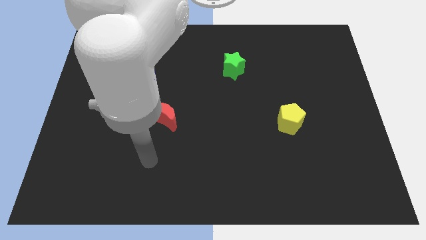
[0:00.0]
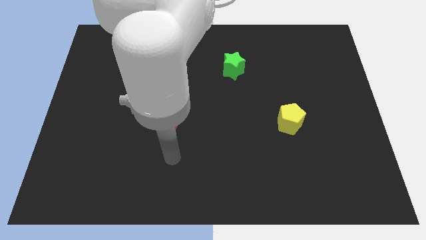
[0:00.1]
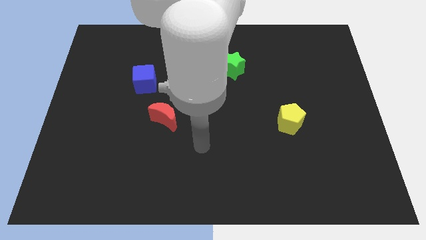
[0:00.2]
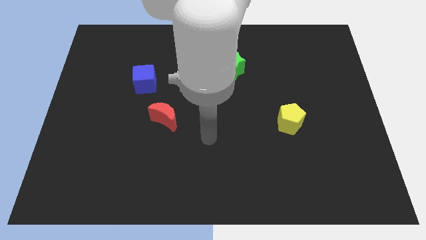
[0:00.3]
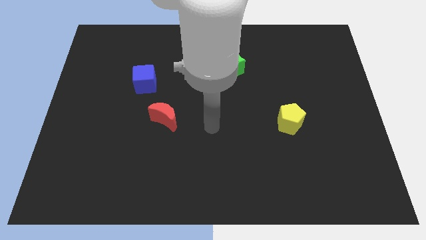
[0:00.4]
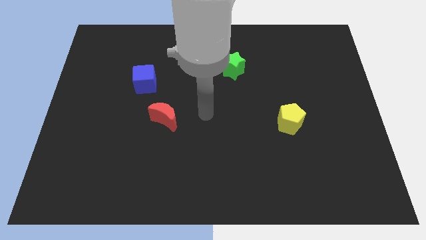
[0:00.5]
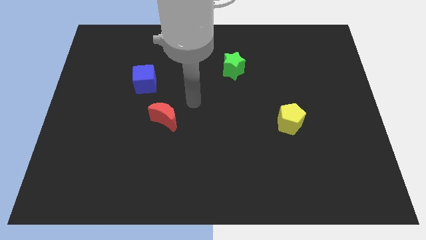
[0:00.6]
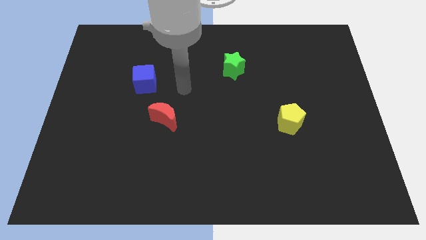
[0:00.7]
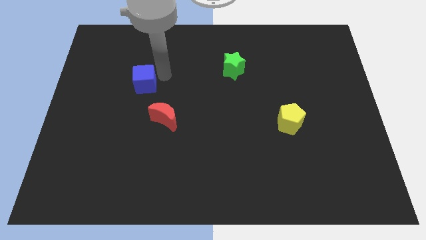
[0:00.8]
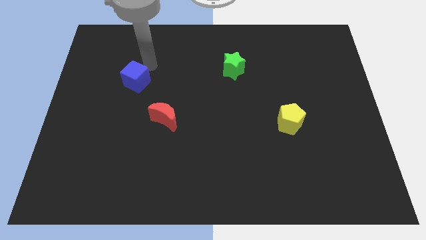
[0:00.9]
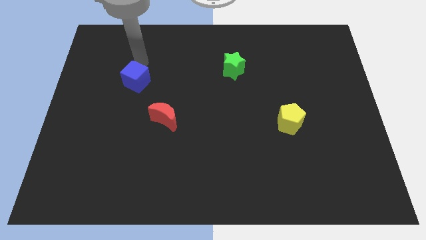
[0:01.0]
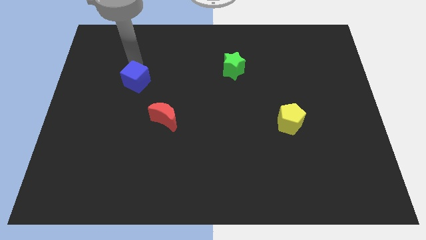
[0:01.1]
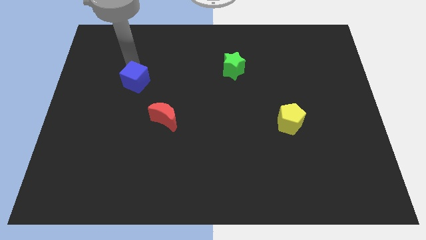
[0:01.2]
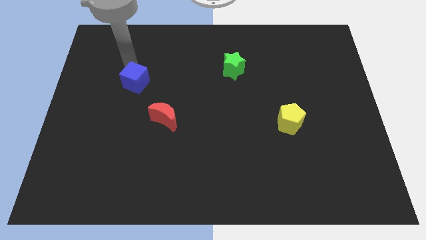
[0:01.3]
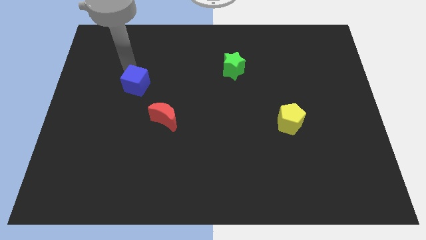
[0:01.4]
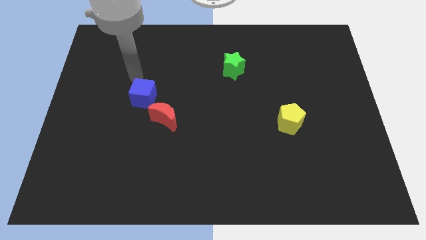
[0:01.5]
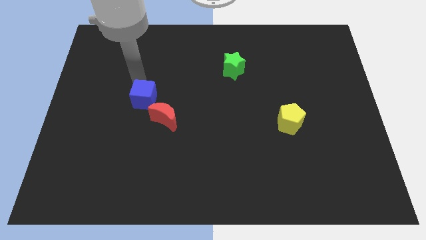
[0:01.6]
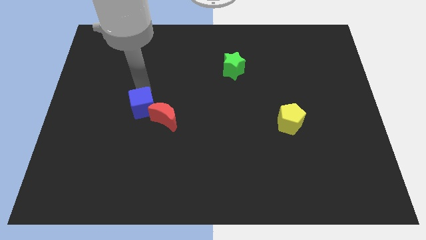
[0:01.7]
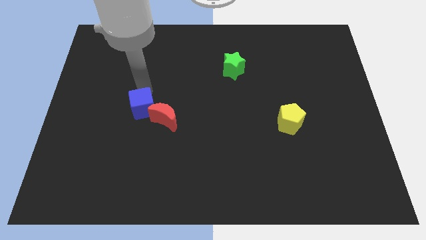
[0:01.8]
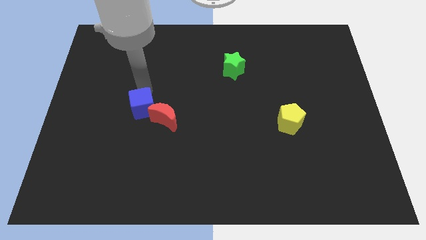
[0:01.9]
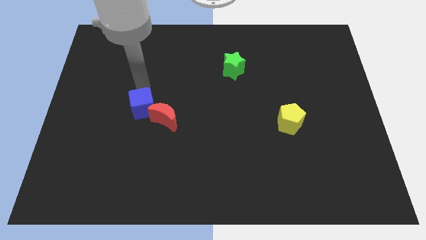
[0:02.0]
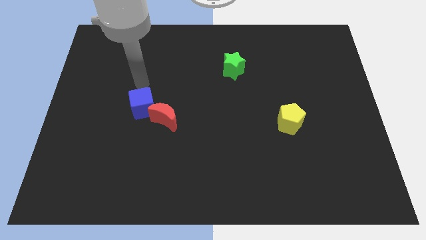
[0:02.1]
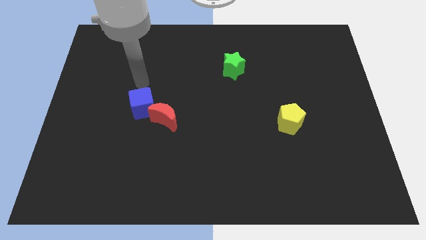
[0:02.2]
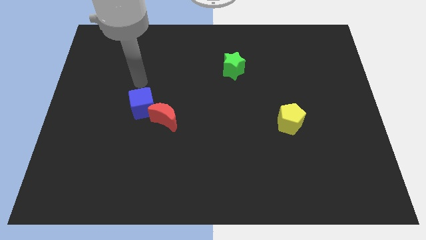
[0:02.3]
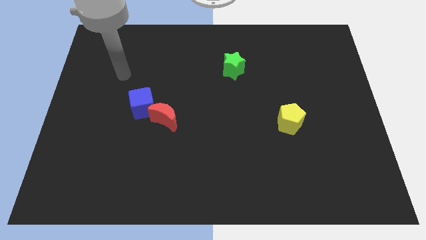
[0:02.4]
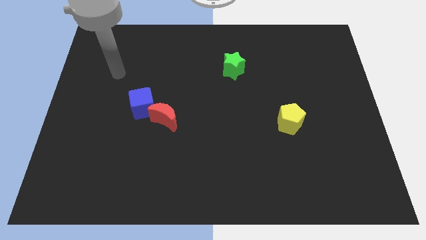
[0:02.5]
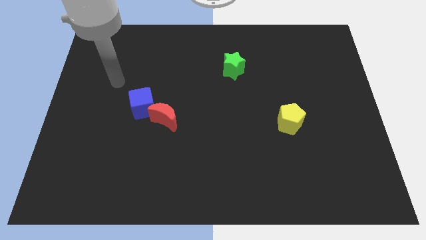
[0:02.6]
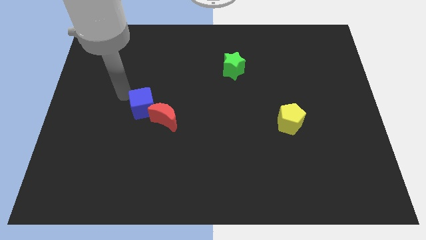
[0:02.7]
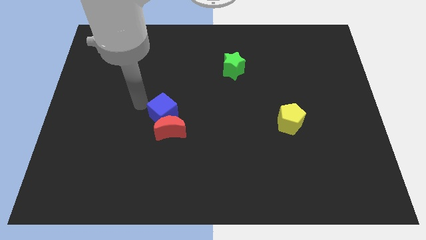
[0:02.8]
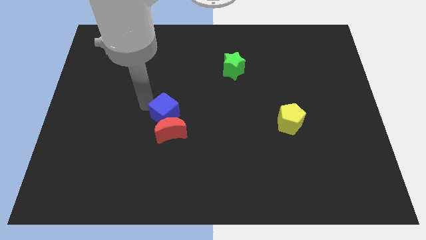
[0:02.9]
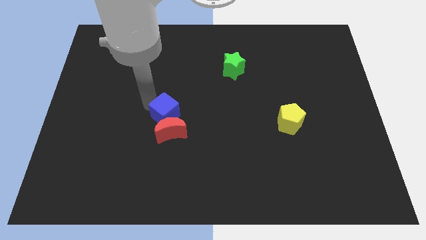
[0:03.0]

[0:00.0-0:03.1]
slide the cube next to the moon

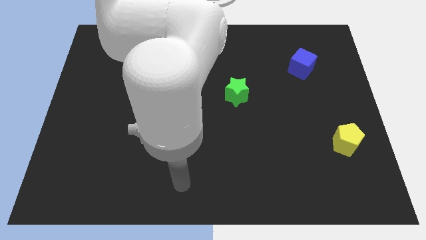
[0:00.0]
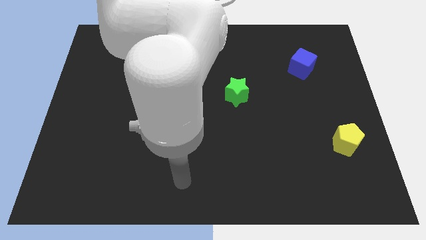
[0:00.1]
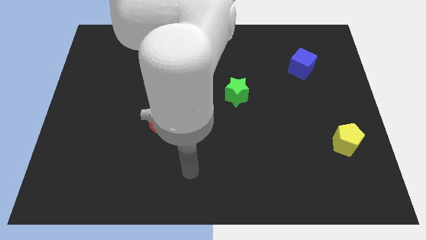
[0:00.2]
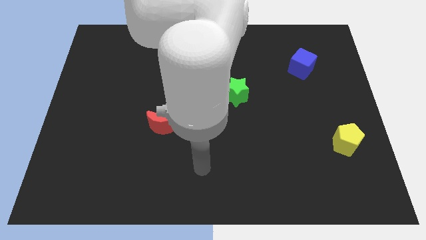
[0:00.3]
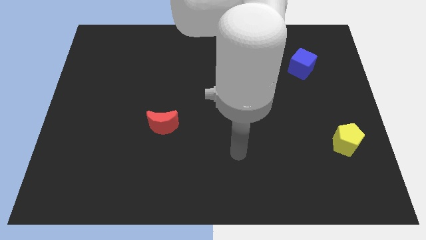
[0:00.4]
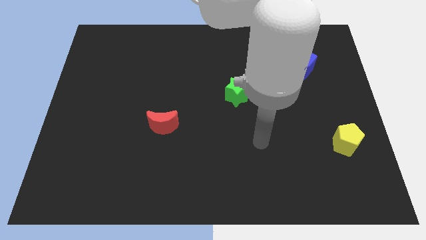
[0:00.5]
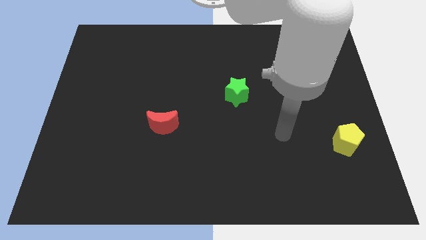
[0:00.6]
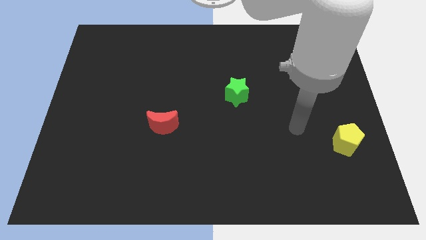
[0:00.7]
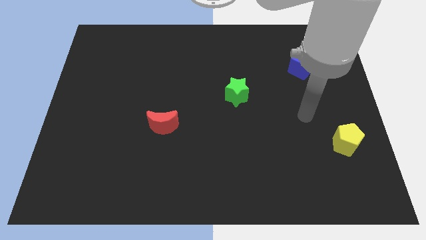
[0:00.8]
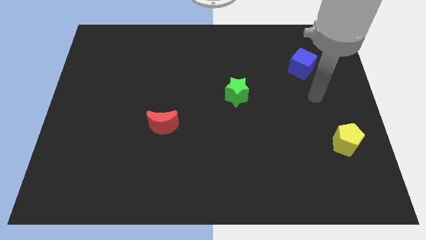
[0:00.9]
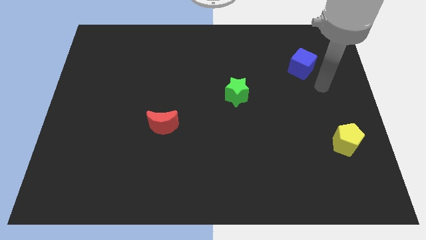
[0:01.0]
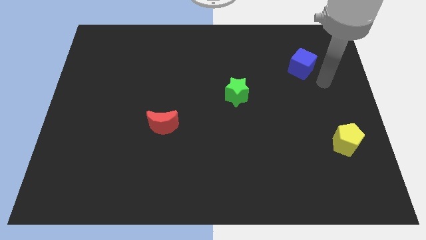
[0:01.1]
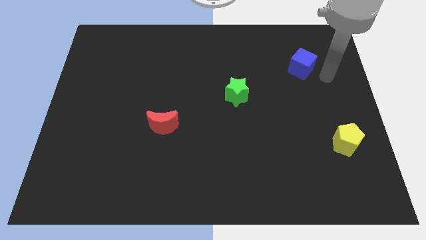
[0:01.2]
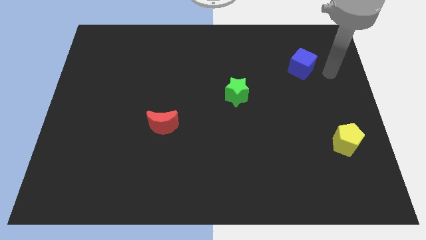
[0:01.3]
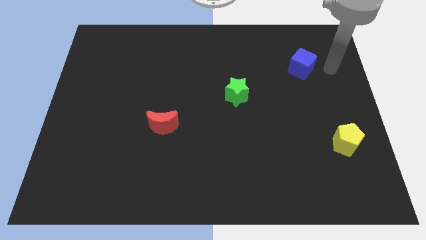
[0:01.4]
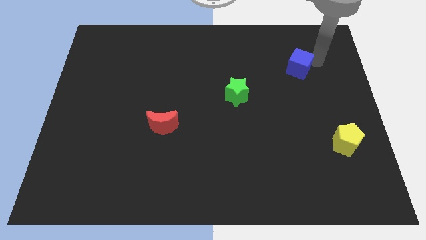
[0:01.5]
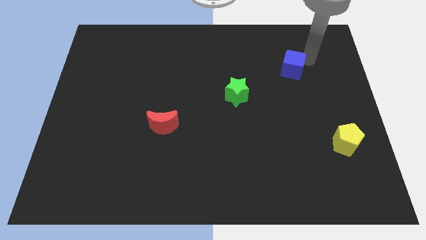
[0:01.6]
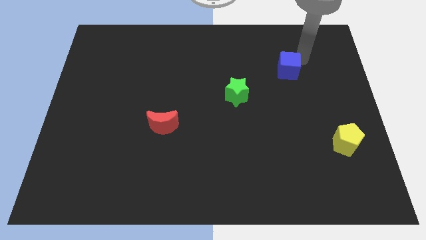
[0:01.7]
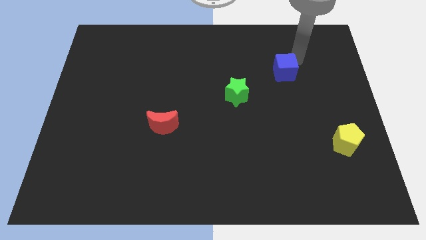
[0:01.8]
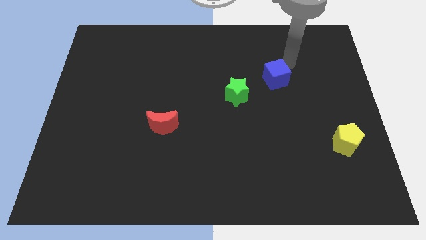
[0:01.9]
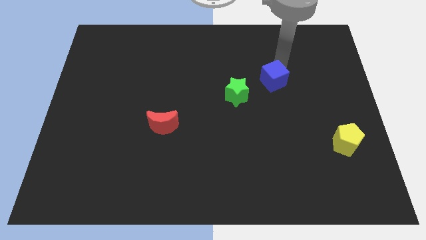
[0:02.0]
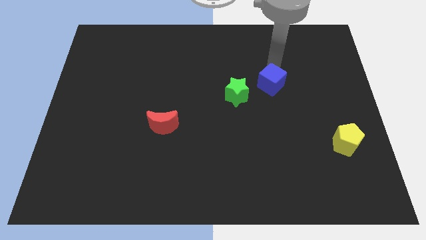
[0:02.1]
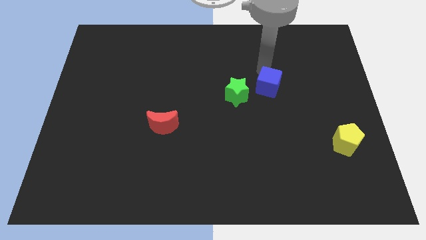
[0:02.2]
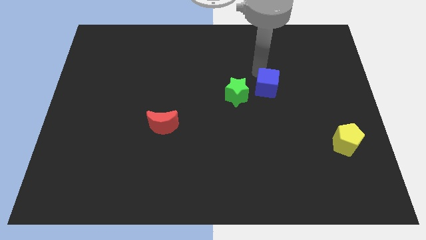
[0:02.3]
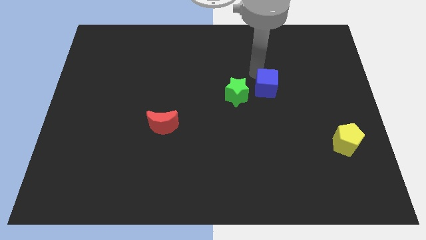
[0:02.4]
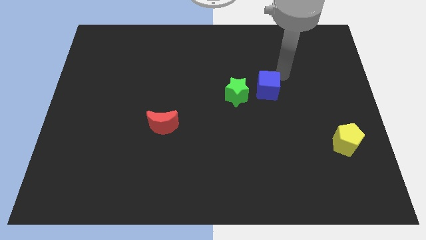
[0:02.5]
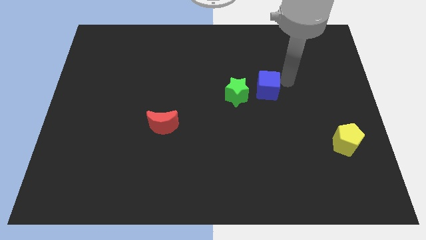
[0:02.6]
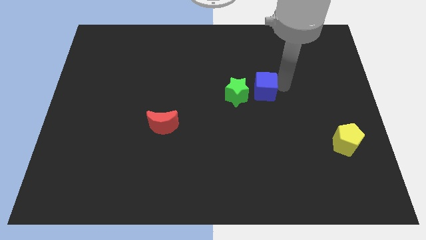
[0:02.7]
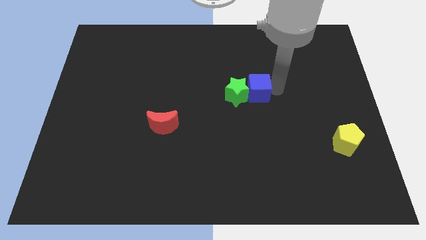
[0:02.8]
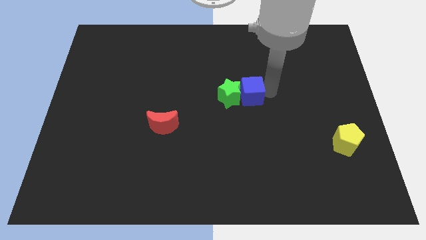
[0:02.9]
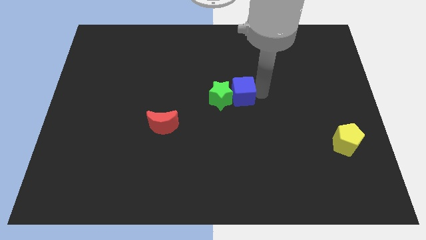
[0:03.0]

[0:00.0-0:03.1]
push the cube to the green star

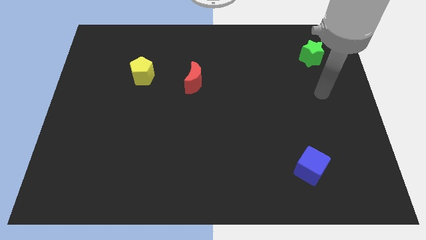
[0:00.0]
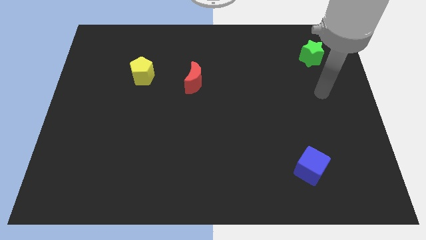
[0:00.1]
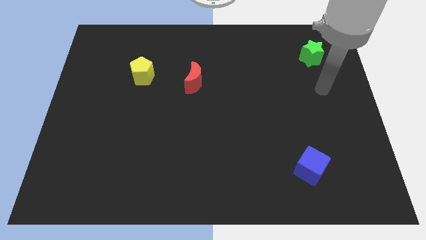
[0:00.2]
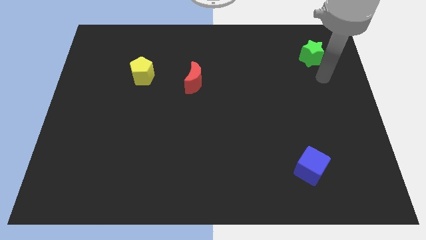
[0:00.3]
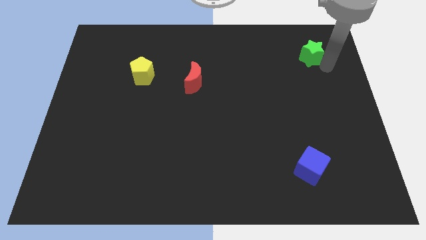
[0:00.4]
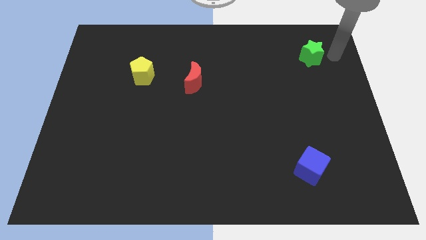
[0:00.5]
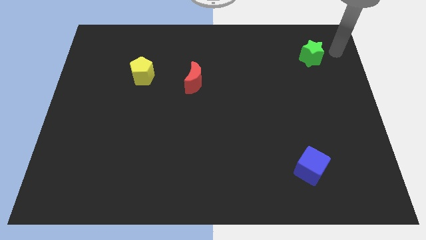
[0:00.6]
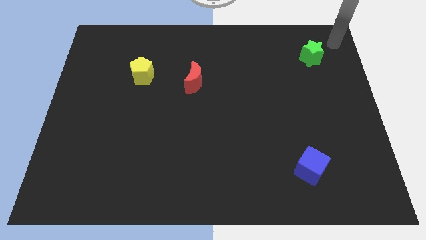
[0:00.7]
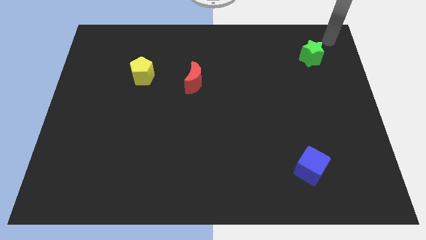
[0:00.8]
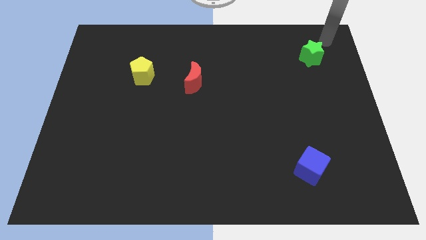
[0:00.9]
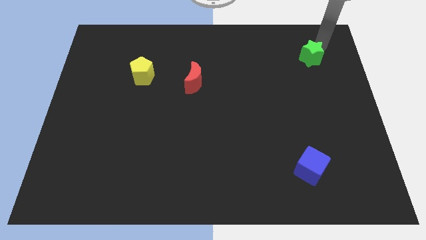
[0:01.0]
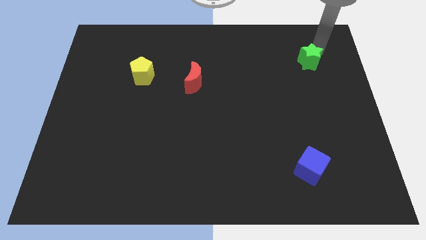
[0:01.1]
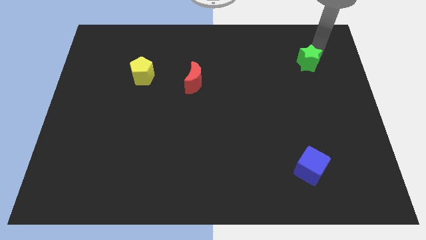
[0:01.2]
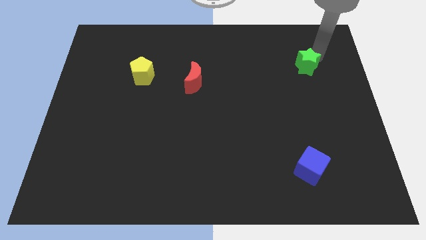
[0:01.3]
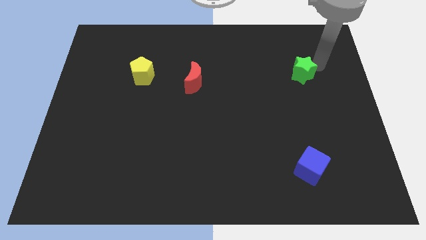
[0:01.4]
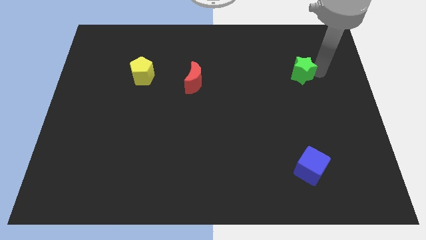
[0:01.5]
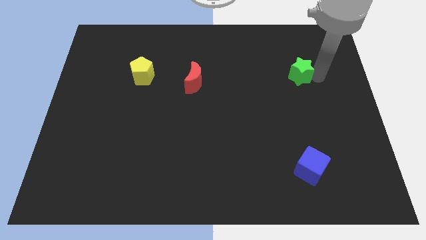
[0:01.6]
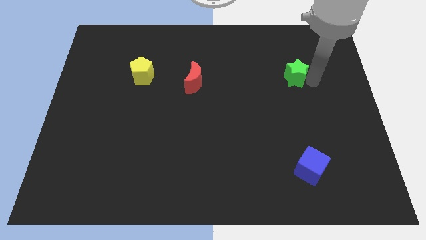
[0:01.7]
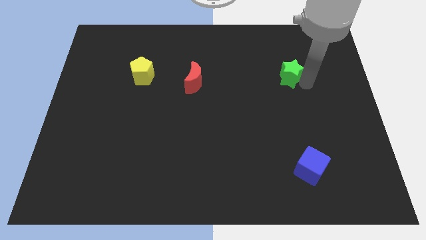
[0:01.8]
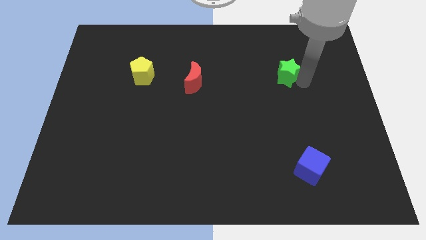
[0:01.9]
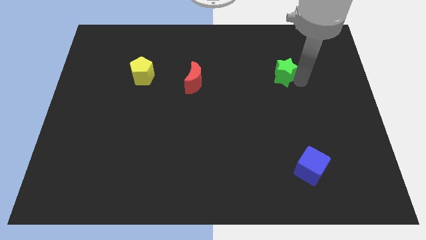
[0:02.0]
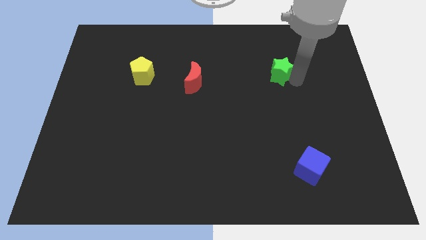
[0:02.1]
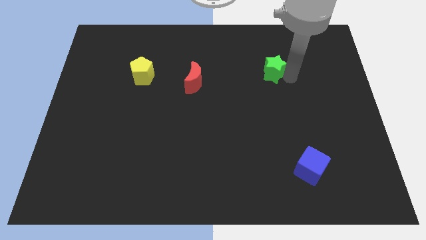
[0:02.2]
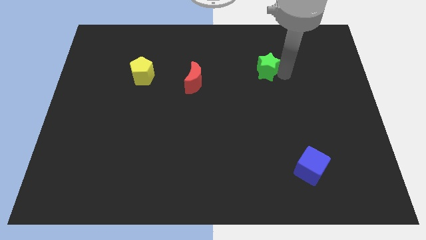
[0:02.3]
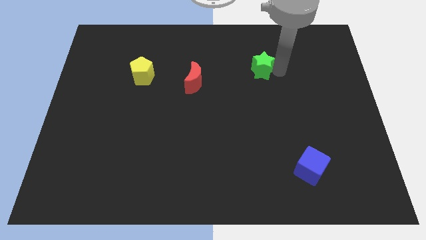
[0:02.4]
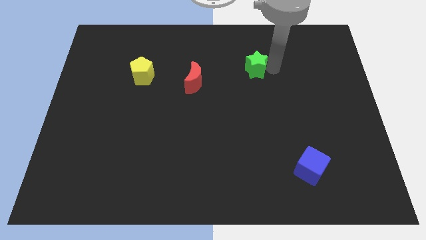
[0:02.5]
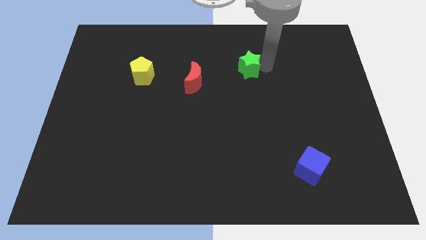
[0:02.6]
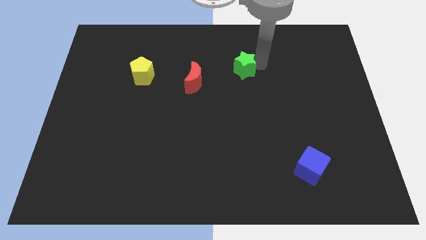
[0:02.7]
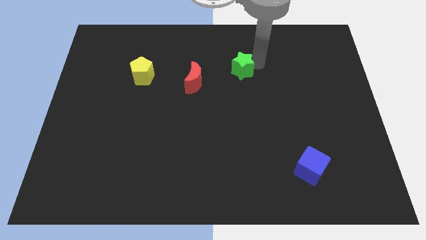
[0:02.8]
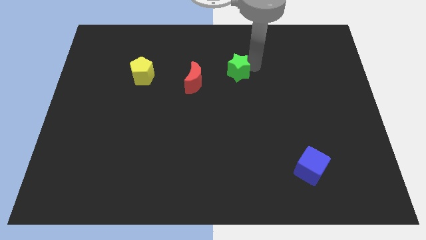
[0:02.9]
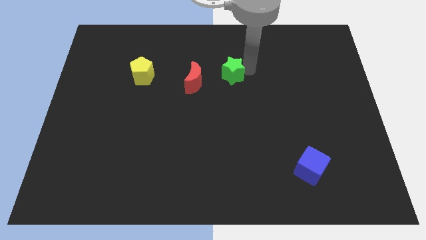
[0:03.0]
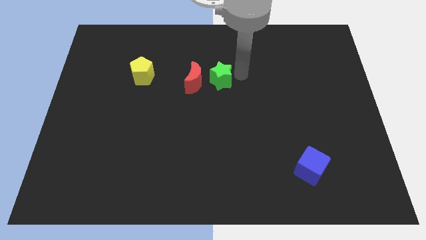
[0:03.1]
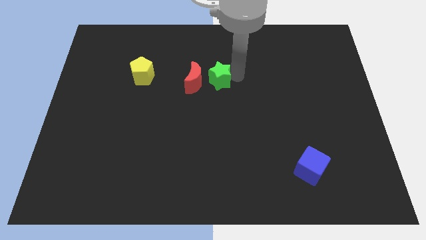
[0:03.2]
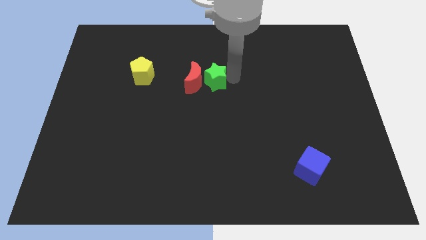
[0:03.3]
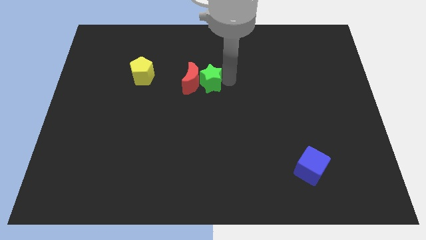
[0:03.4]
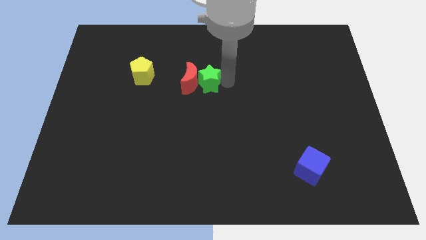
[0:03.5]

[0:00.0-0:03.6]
slide the green block to the red block
